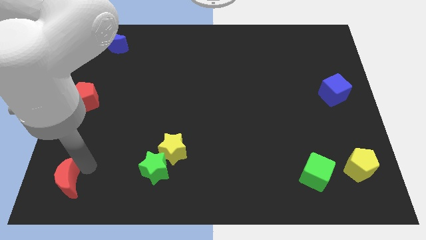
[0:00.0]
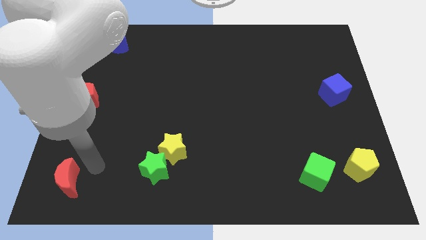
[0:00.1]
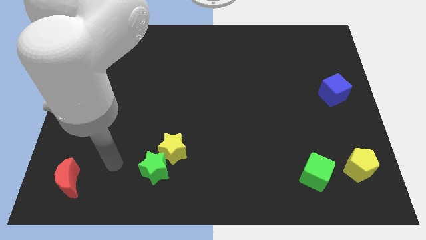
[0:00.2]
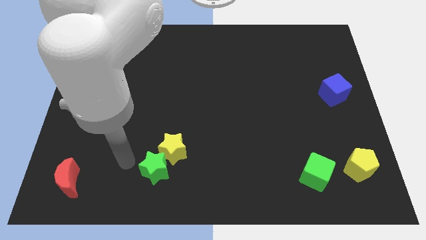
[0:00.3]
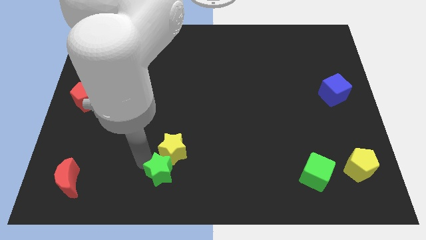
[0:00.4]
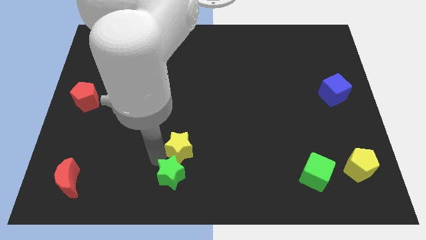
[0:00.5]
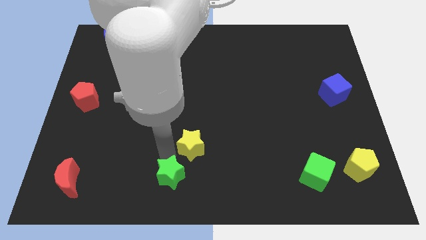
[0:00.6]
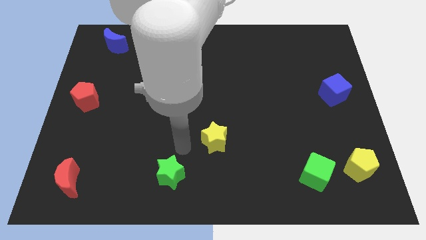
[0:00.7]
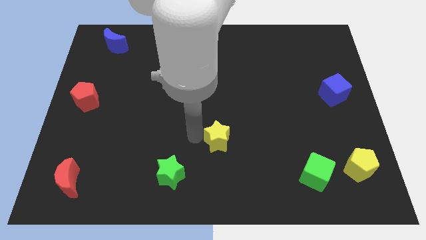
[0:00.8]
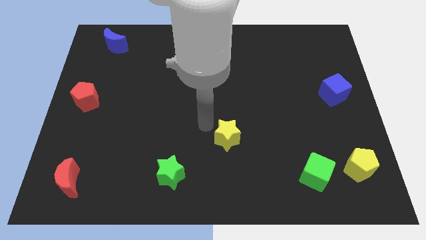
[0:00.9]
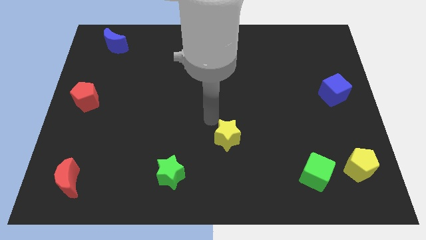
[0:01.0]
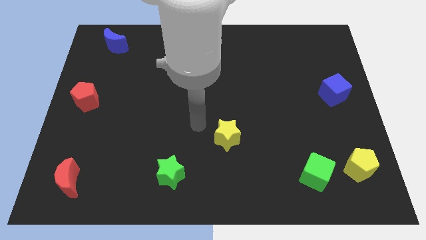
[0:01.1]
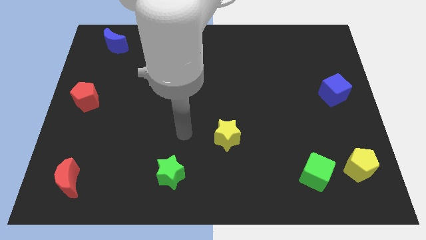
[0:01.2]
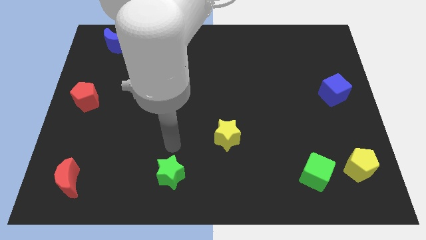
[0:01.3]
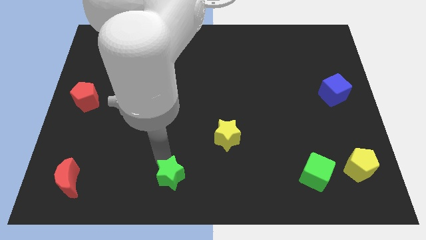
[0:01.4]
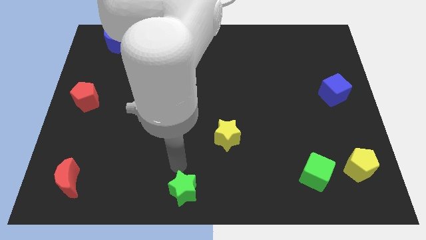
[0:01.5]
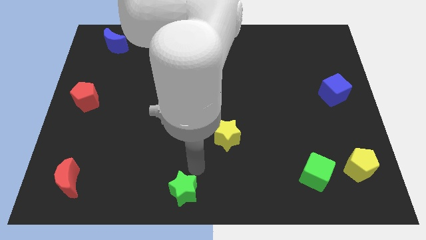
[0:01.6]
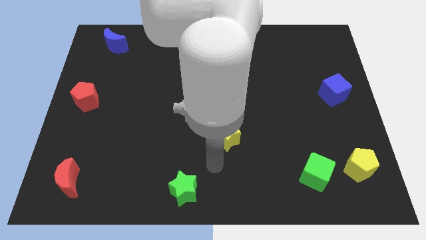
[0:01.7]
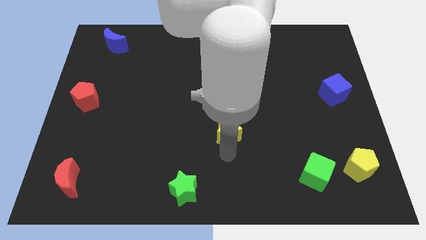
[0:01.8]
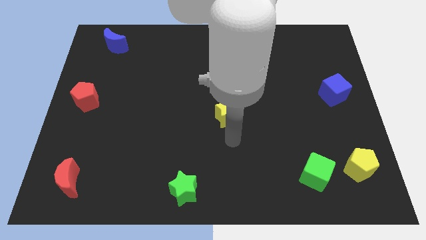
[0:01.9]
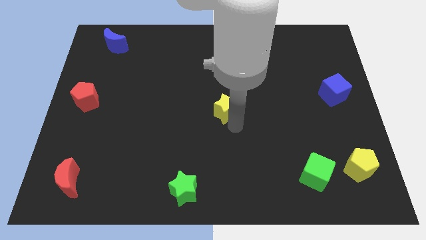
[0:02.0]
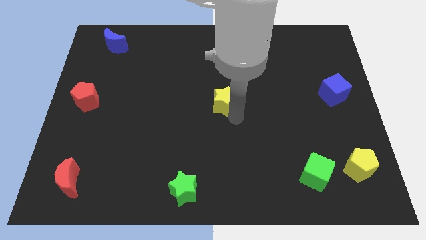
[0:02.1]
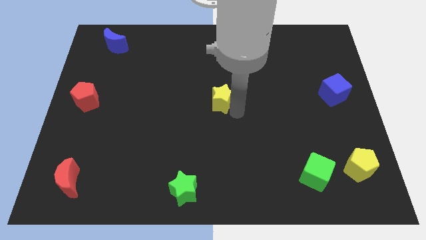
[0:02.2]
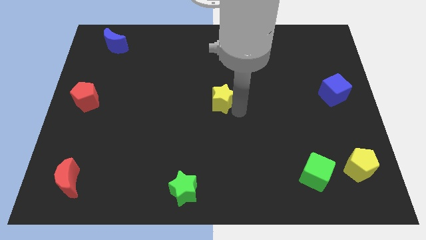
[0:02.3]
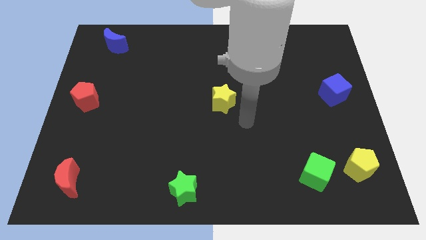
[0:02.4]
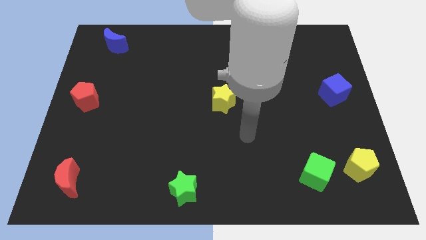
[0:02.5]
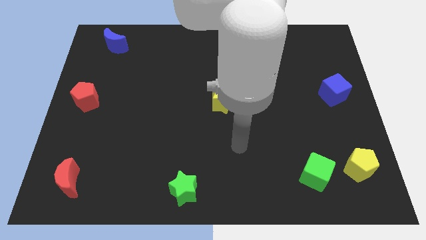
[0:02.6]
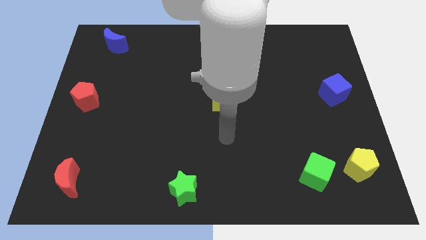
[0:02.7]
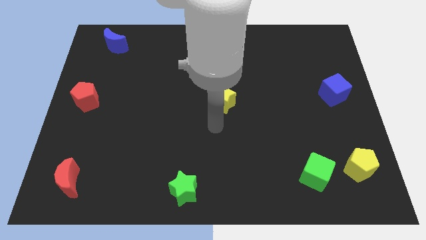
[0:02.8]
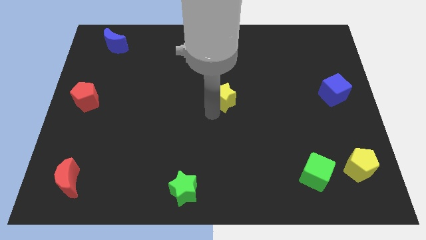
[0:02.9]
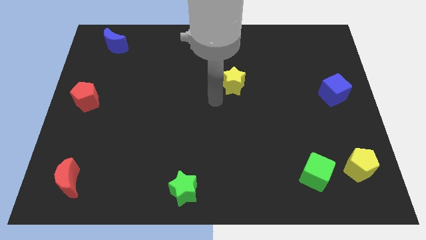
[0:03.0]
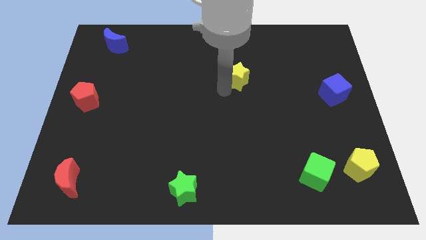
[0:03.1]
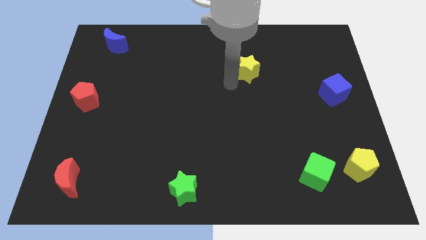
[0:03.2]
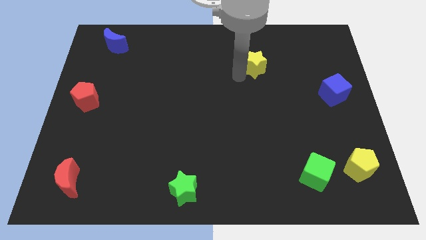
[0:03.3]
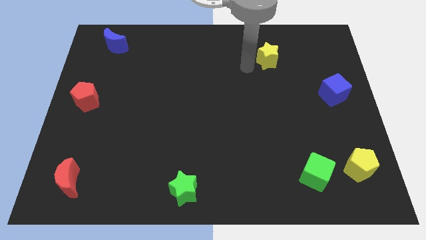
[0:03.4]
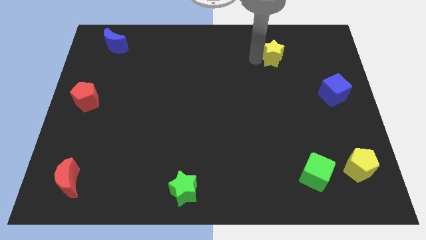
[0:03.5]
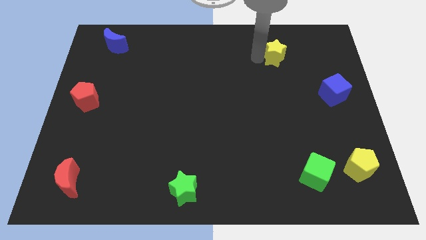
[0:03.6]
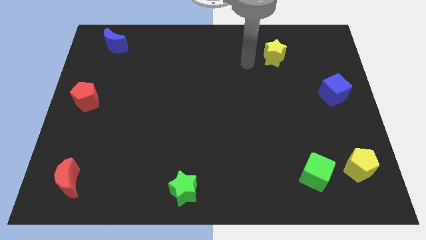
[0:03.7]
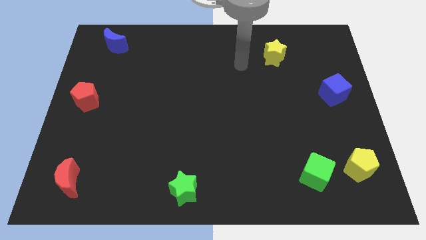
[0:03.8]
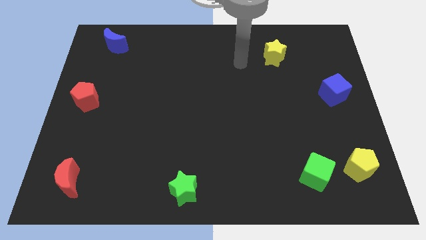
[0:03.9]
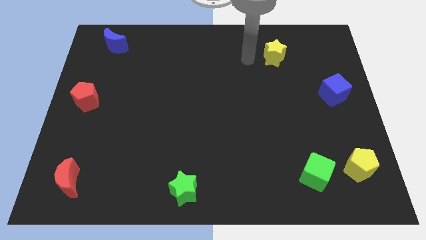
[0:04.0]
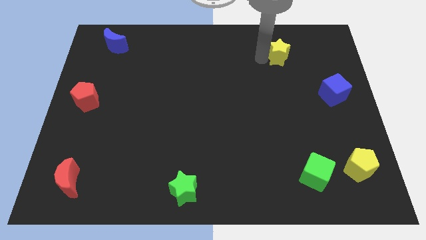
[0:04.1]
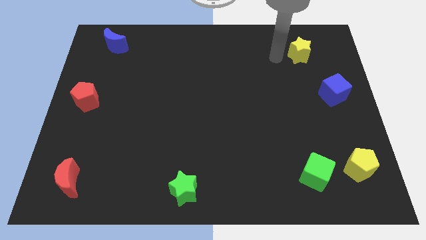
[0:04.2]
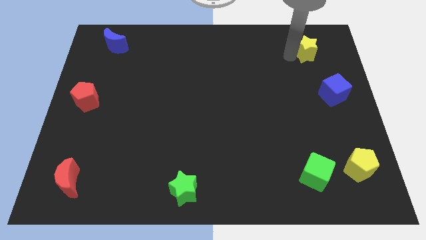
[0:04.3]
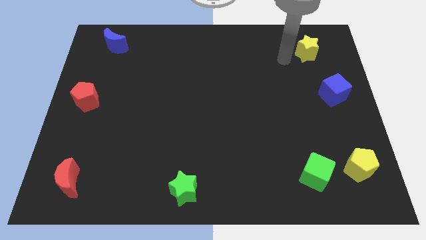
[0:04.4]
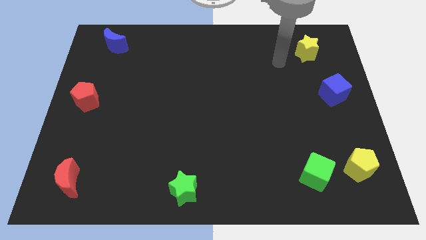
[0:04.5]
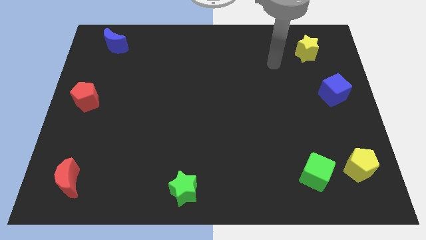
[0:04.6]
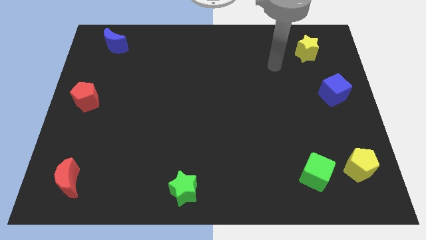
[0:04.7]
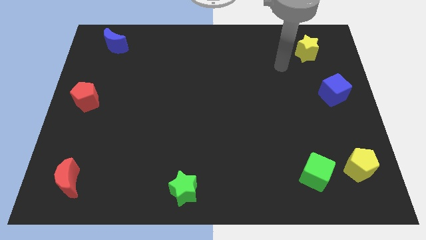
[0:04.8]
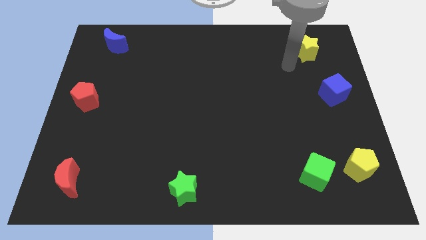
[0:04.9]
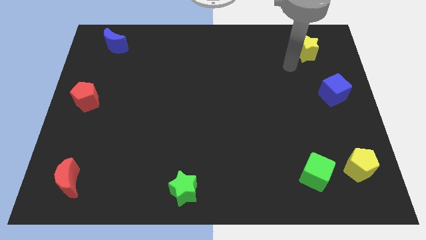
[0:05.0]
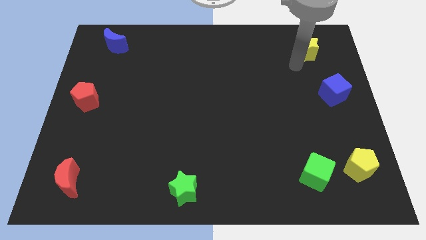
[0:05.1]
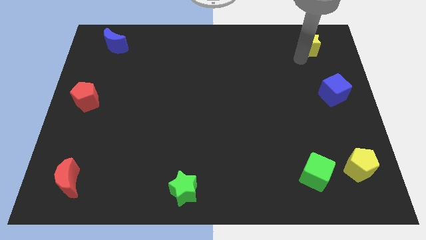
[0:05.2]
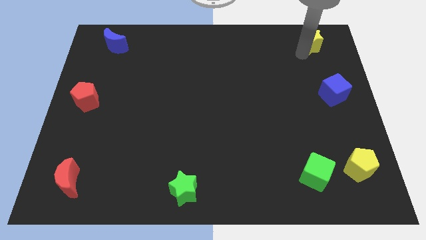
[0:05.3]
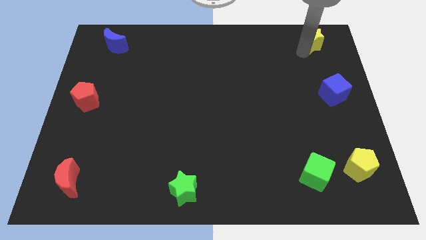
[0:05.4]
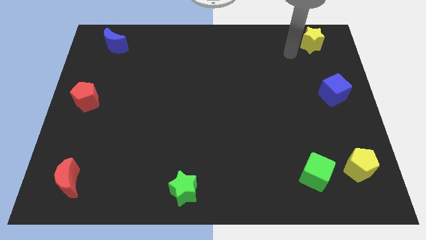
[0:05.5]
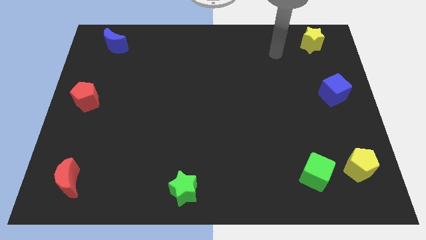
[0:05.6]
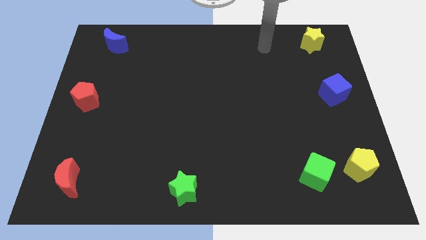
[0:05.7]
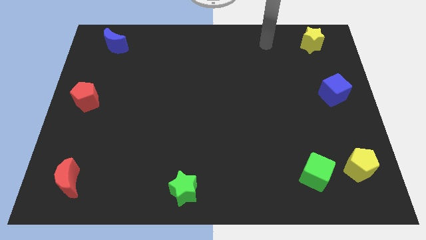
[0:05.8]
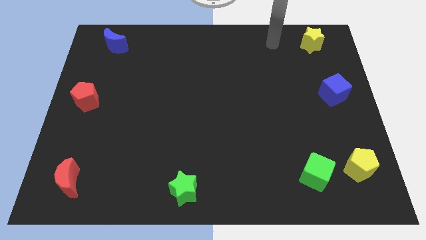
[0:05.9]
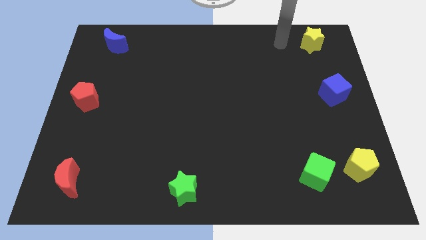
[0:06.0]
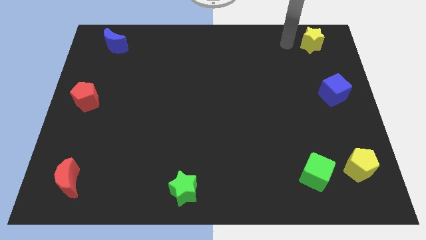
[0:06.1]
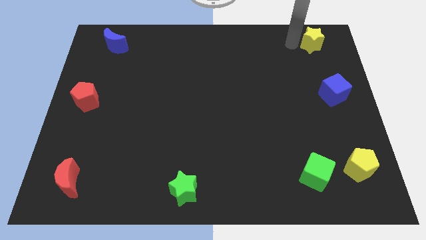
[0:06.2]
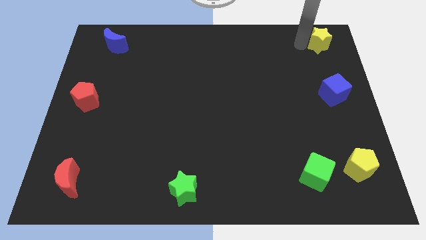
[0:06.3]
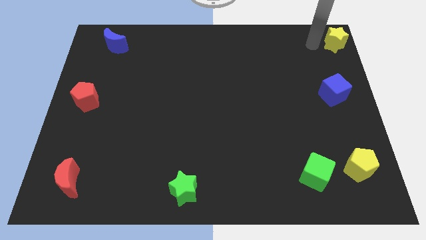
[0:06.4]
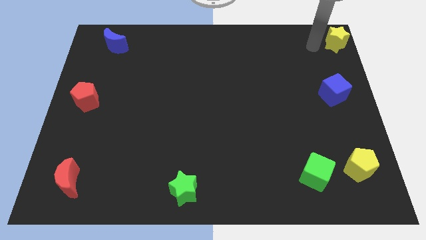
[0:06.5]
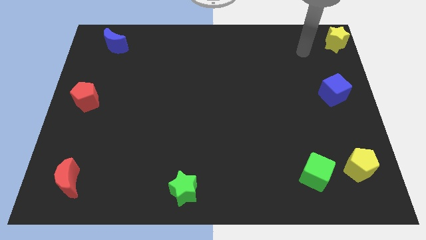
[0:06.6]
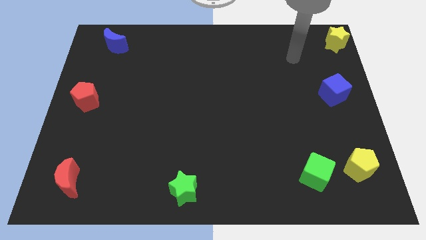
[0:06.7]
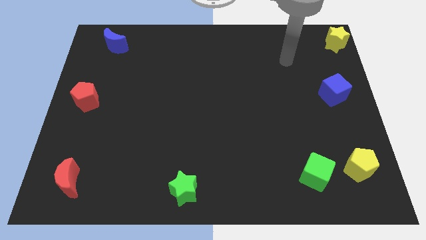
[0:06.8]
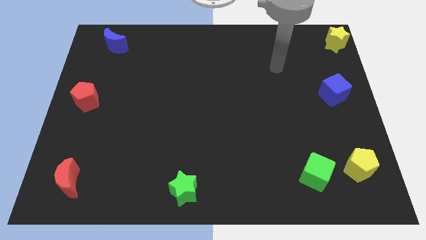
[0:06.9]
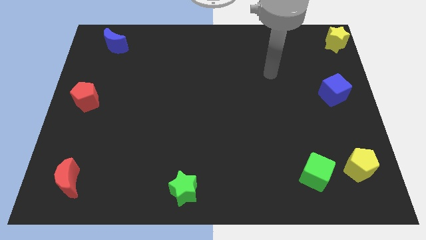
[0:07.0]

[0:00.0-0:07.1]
move the yellow star at the top right corner of the board

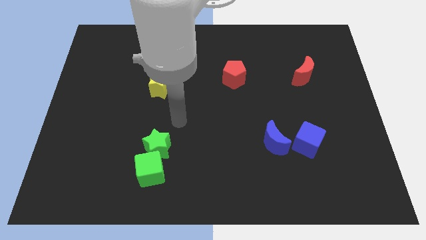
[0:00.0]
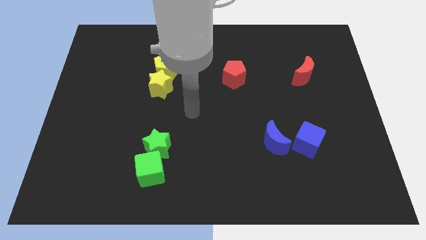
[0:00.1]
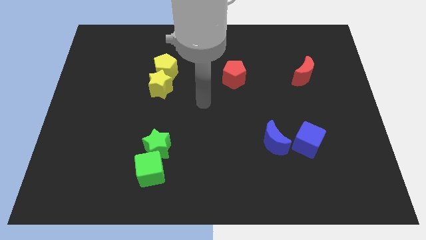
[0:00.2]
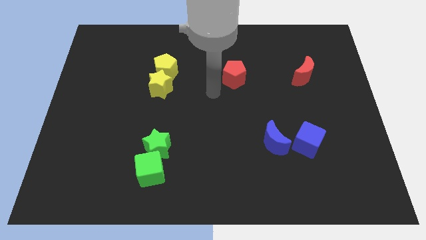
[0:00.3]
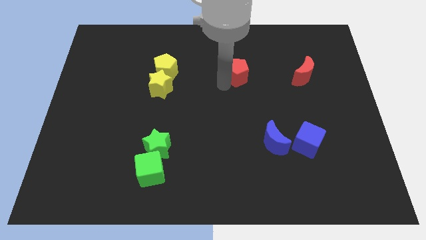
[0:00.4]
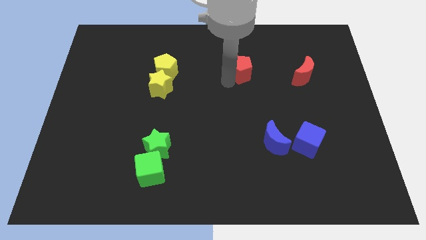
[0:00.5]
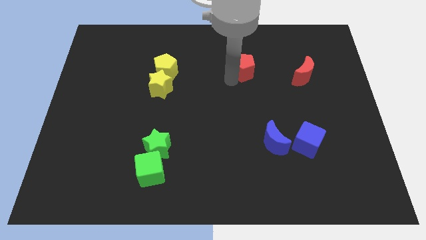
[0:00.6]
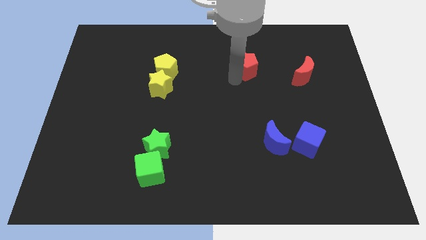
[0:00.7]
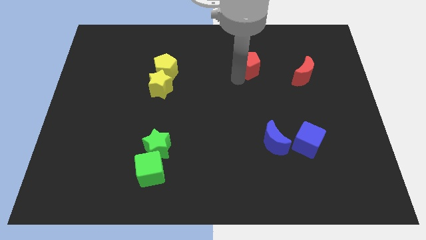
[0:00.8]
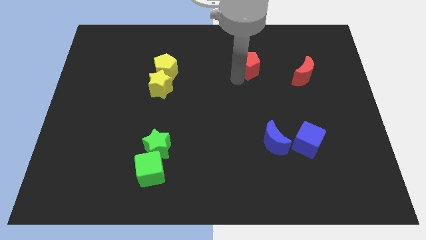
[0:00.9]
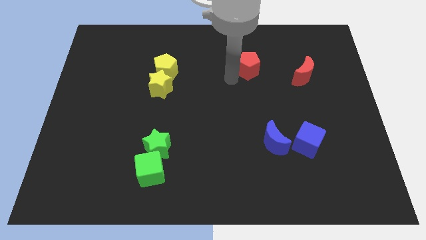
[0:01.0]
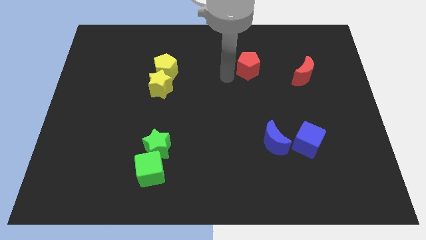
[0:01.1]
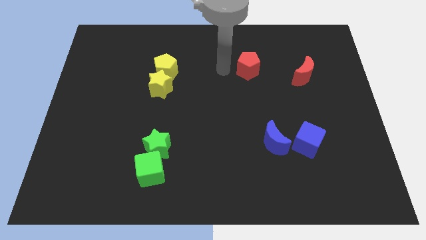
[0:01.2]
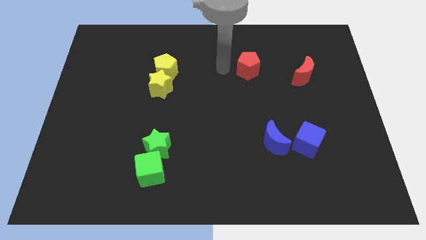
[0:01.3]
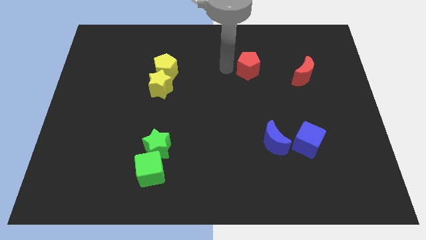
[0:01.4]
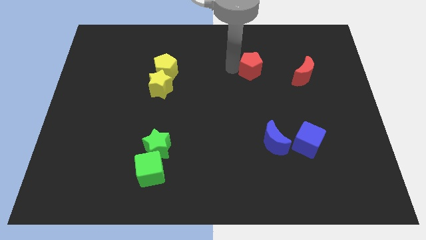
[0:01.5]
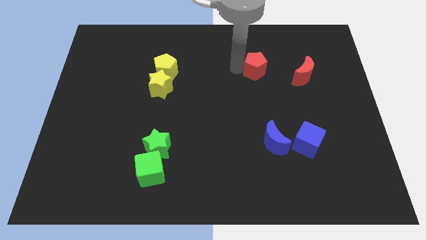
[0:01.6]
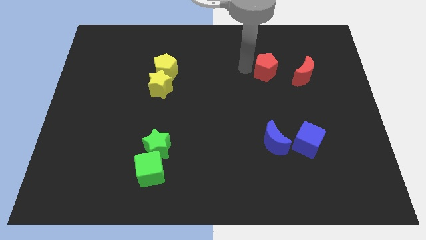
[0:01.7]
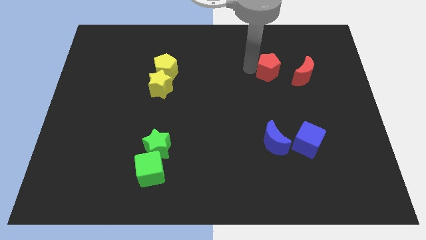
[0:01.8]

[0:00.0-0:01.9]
move the red pentagon vertically above the blue moon
